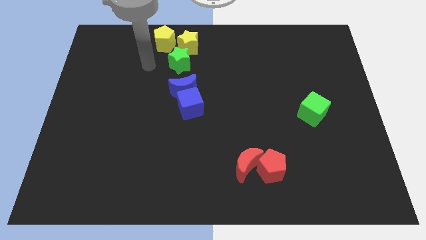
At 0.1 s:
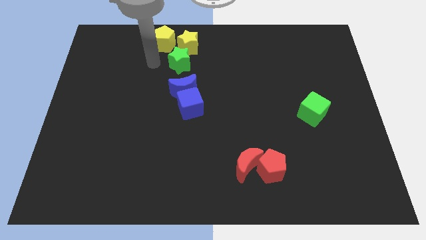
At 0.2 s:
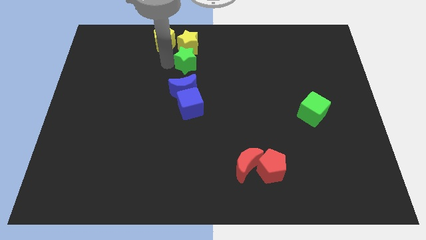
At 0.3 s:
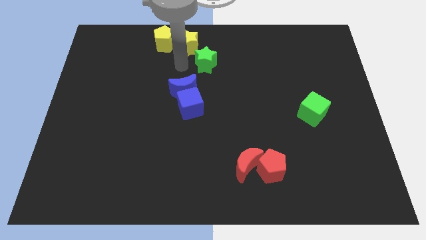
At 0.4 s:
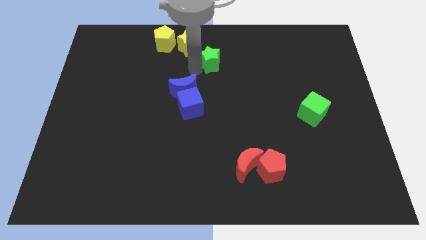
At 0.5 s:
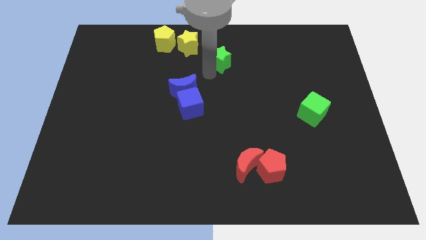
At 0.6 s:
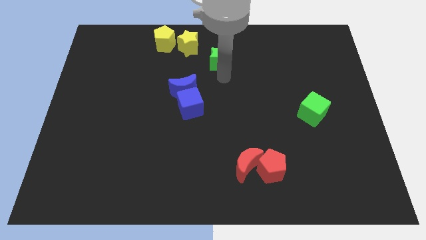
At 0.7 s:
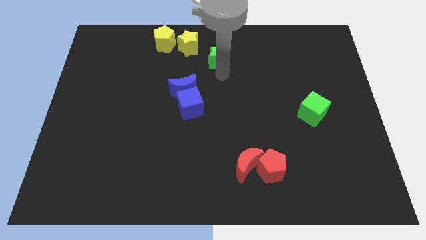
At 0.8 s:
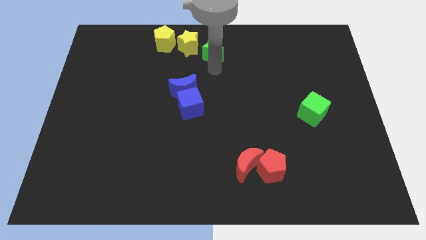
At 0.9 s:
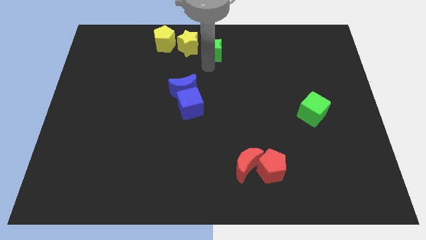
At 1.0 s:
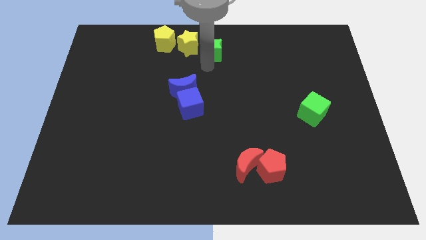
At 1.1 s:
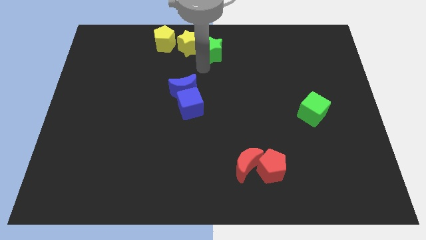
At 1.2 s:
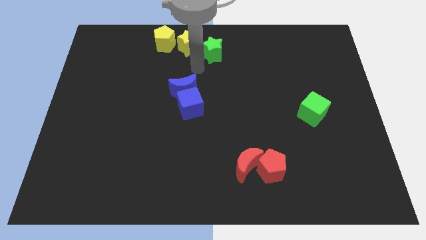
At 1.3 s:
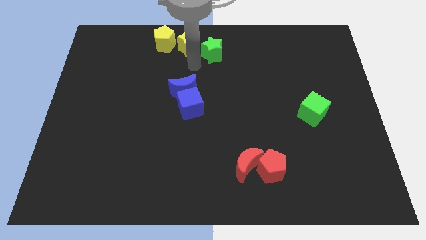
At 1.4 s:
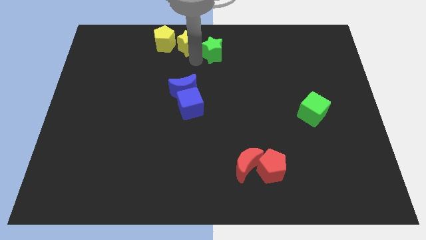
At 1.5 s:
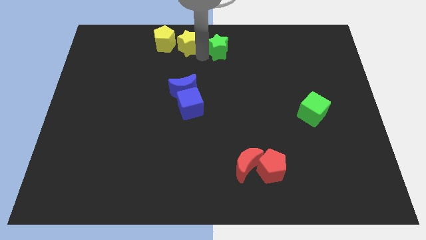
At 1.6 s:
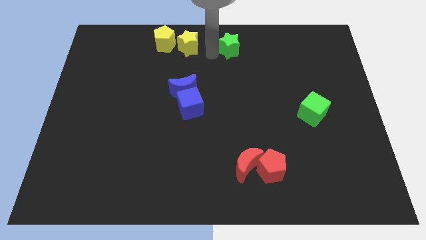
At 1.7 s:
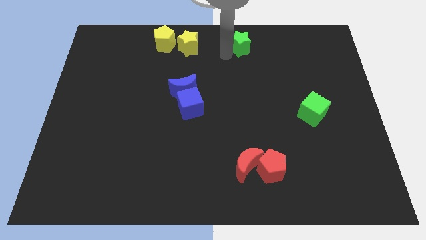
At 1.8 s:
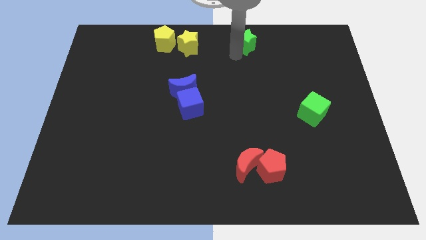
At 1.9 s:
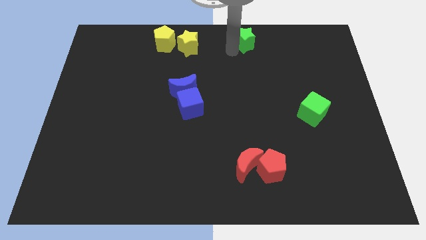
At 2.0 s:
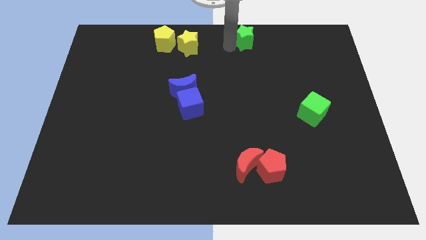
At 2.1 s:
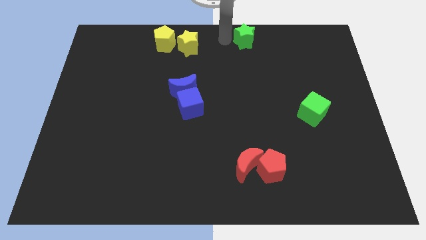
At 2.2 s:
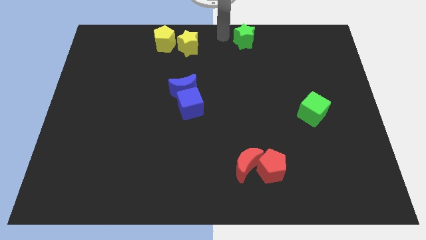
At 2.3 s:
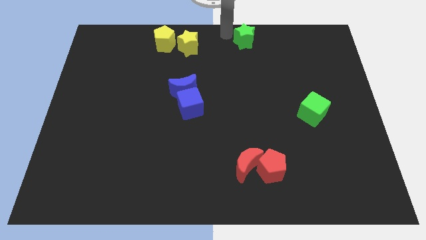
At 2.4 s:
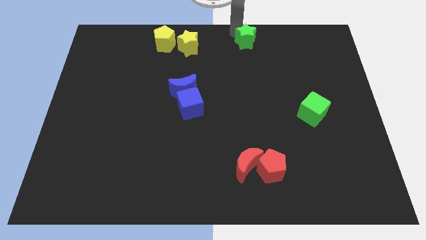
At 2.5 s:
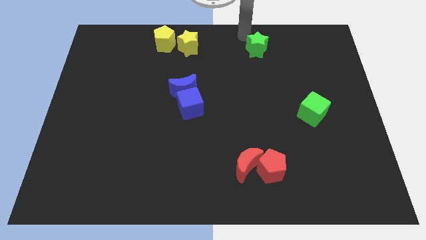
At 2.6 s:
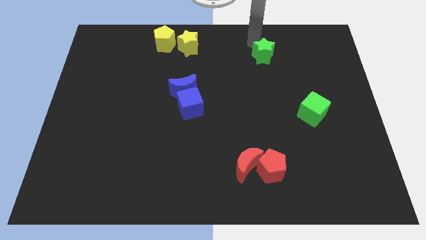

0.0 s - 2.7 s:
place the green star top right of the board

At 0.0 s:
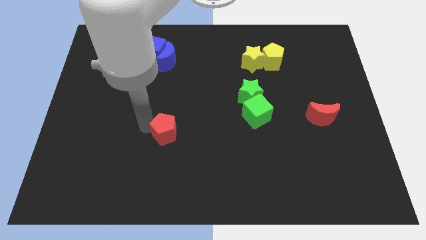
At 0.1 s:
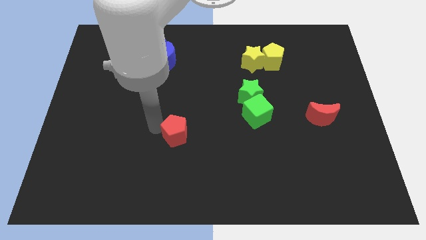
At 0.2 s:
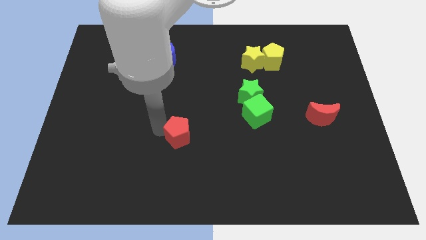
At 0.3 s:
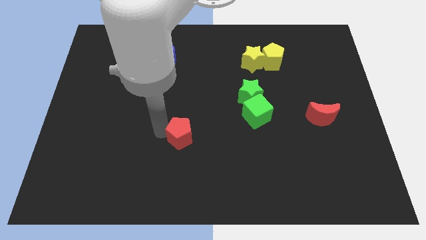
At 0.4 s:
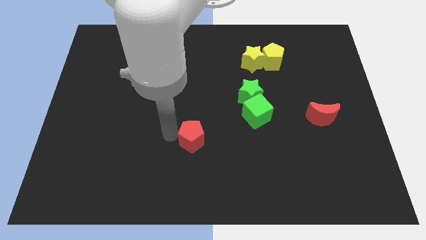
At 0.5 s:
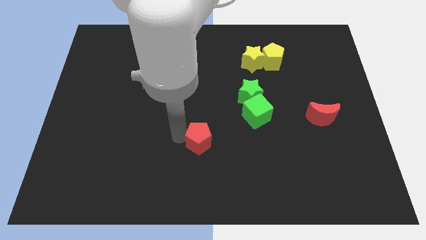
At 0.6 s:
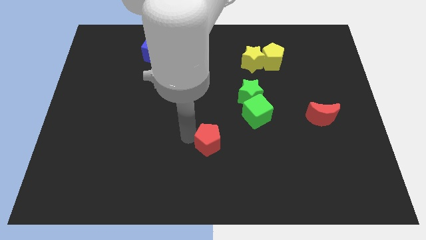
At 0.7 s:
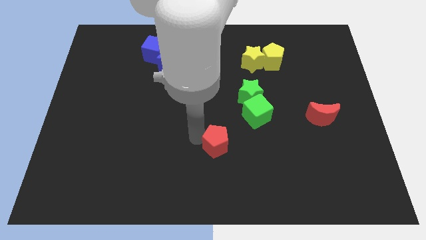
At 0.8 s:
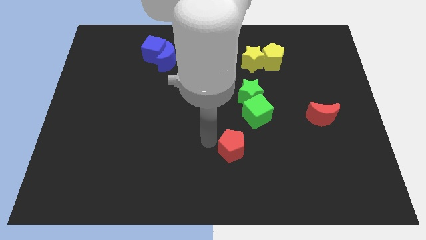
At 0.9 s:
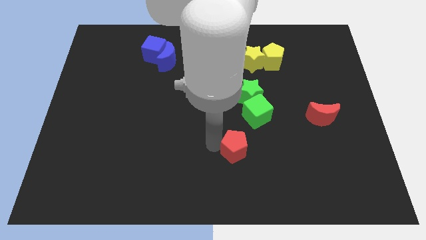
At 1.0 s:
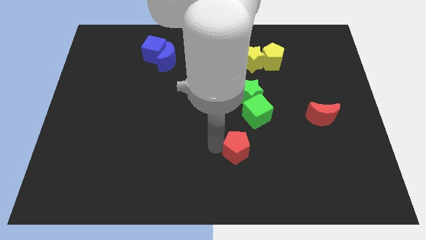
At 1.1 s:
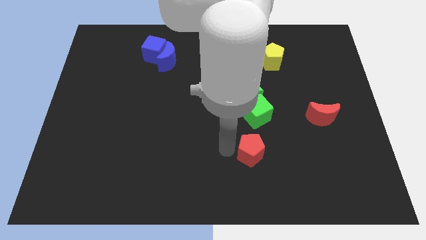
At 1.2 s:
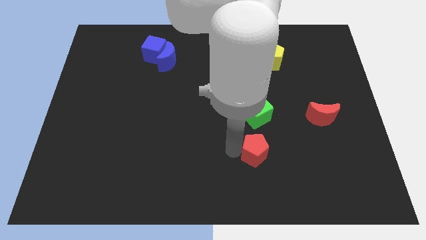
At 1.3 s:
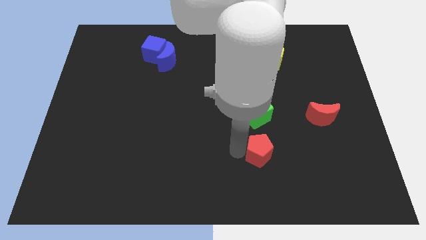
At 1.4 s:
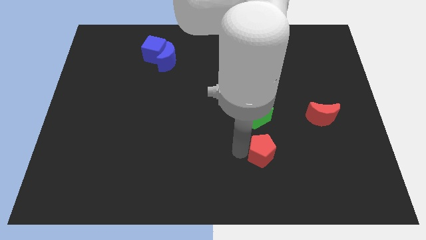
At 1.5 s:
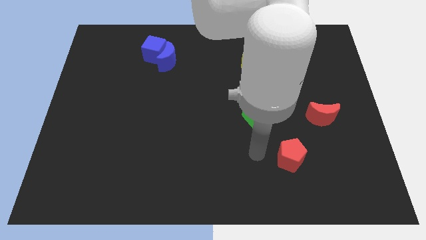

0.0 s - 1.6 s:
place the red pentagon below the green cube

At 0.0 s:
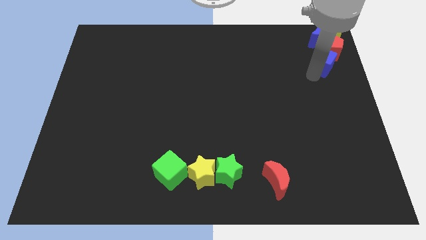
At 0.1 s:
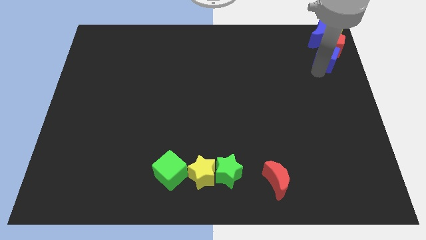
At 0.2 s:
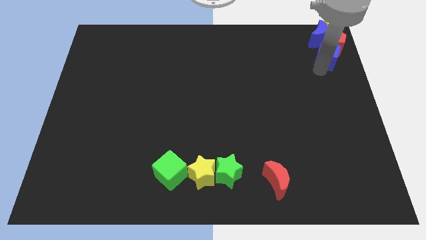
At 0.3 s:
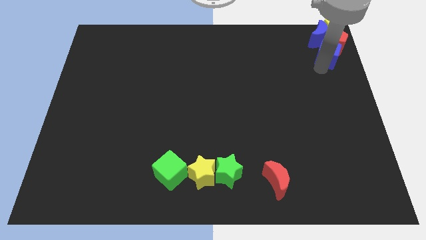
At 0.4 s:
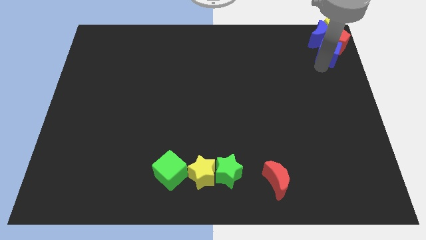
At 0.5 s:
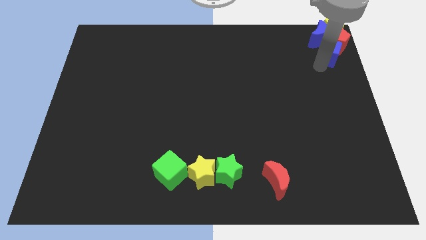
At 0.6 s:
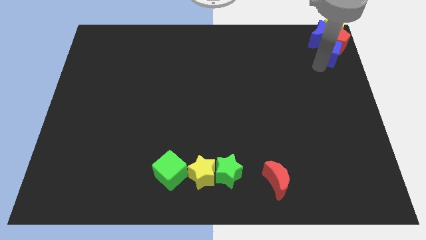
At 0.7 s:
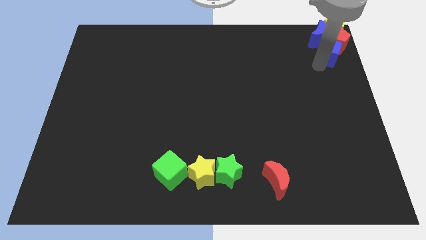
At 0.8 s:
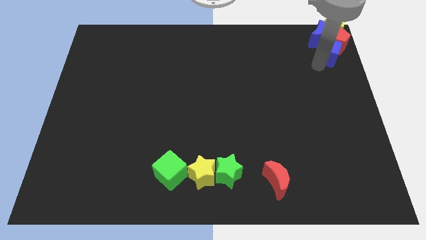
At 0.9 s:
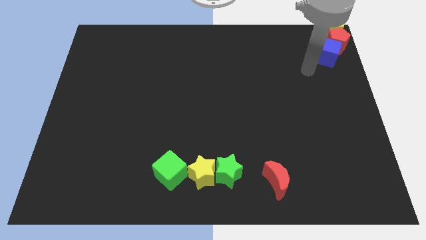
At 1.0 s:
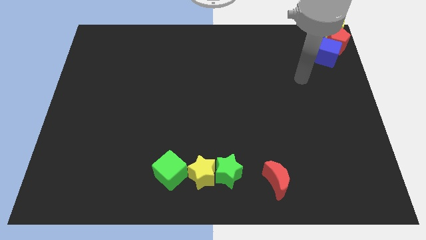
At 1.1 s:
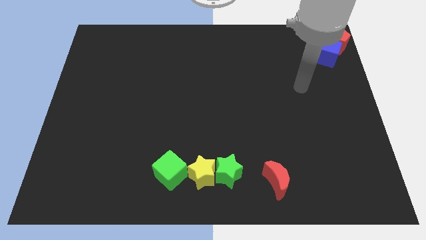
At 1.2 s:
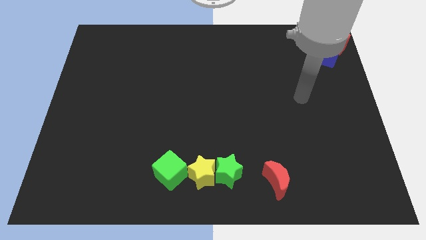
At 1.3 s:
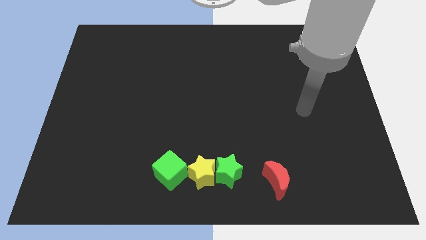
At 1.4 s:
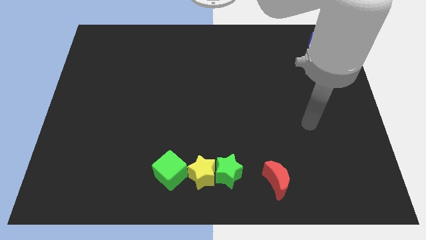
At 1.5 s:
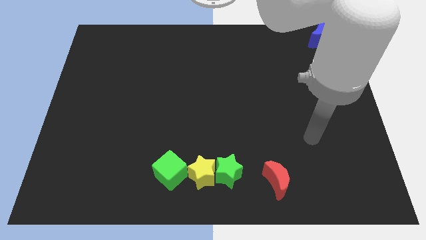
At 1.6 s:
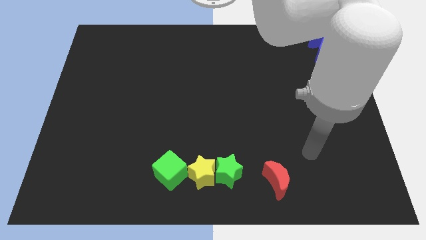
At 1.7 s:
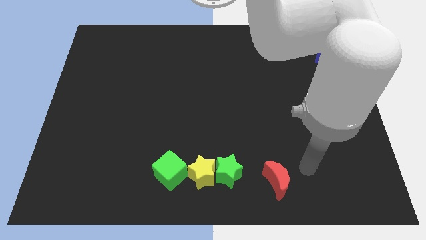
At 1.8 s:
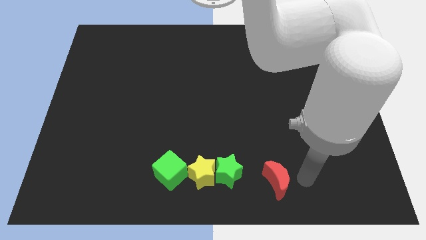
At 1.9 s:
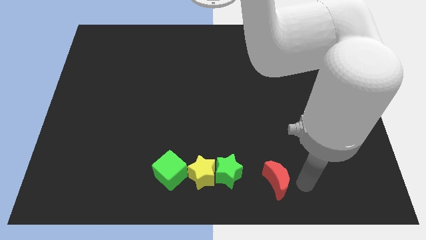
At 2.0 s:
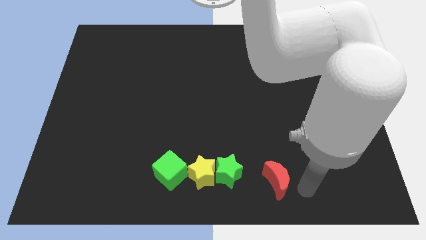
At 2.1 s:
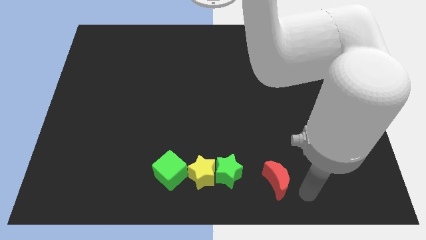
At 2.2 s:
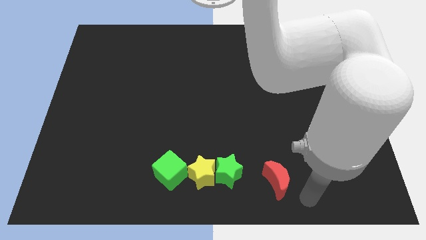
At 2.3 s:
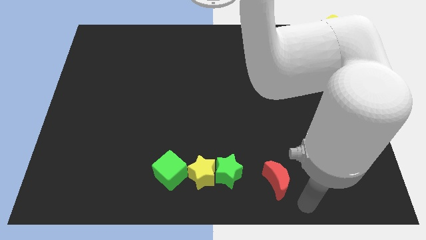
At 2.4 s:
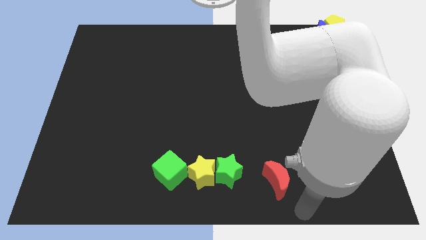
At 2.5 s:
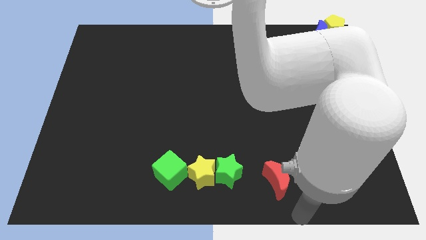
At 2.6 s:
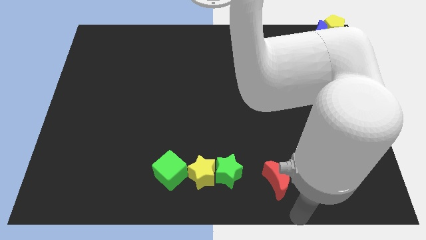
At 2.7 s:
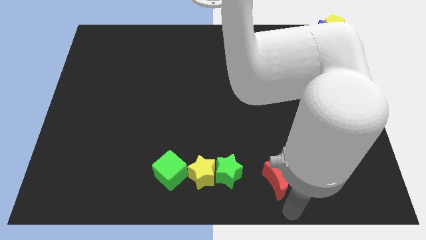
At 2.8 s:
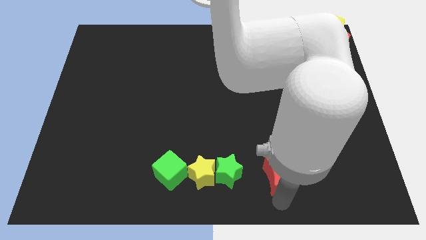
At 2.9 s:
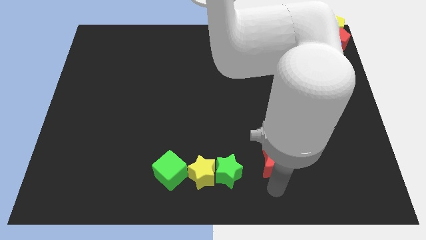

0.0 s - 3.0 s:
place the arm down to the red moon

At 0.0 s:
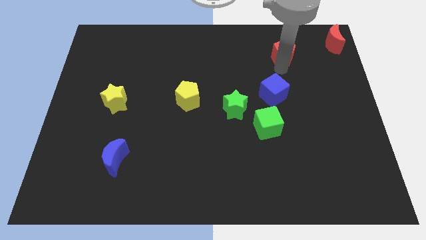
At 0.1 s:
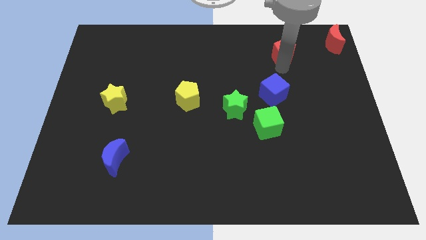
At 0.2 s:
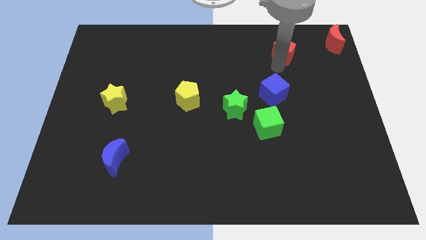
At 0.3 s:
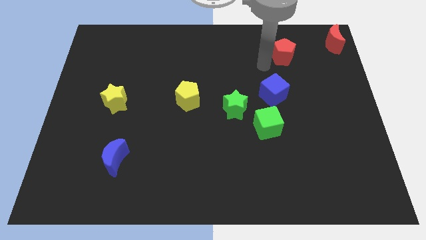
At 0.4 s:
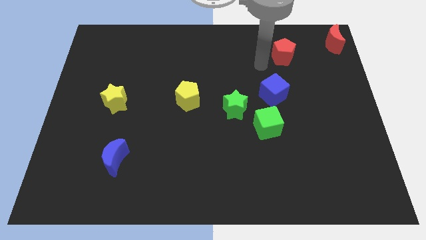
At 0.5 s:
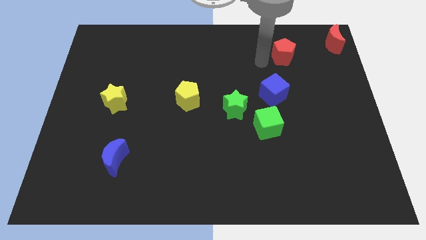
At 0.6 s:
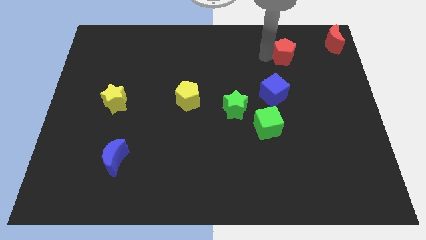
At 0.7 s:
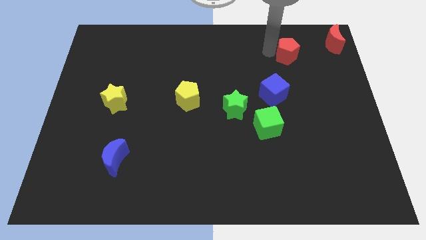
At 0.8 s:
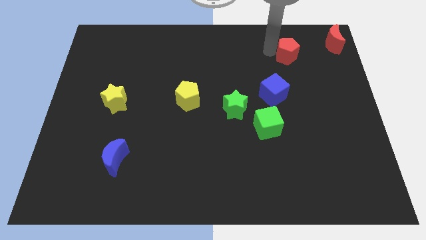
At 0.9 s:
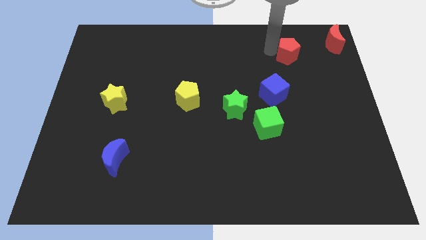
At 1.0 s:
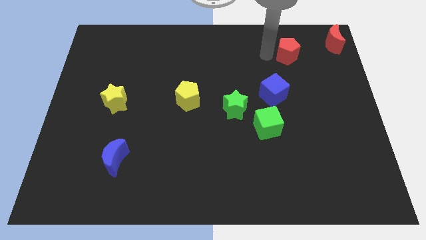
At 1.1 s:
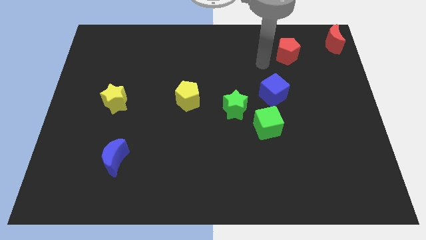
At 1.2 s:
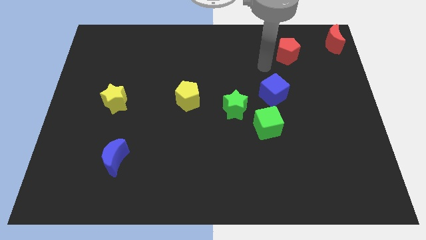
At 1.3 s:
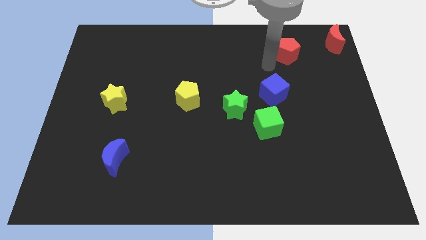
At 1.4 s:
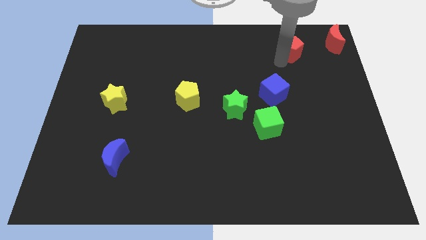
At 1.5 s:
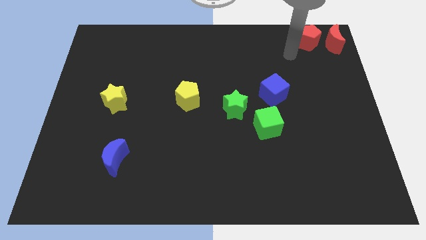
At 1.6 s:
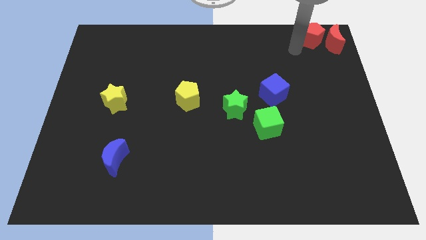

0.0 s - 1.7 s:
place the red pentagon to the left side of red moon
